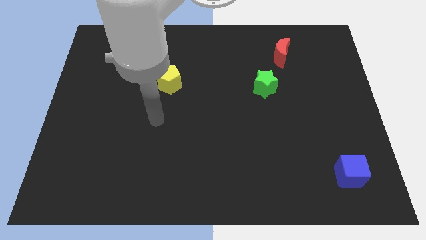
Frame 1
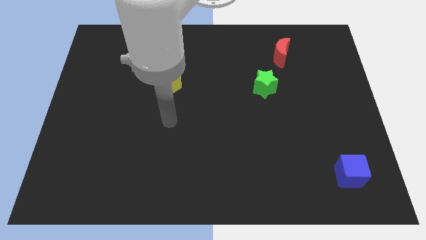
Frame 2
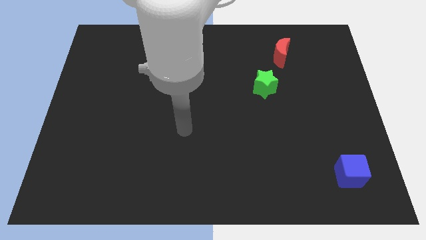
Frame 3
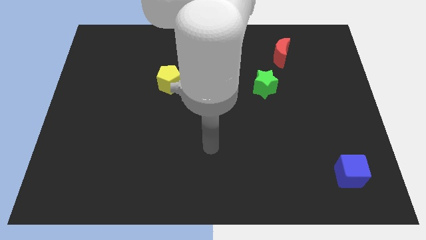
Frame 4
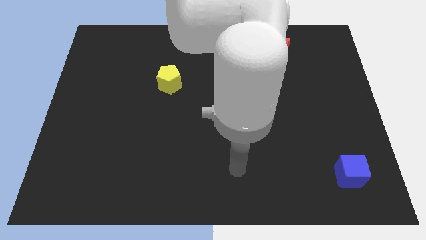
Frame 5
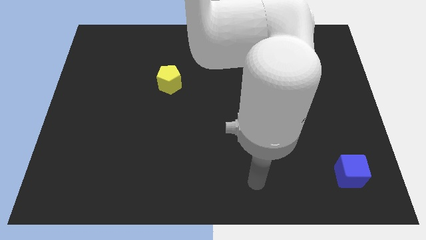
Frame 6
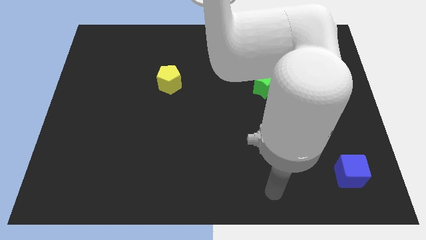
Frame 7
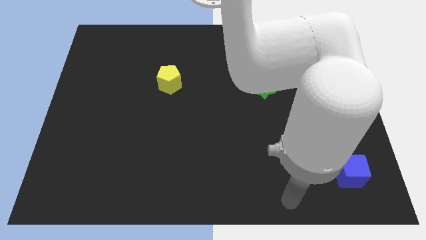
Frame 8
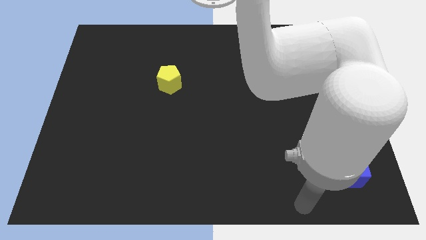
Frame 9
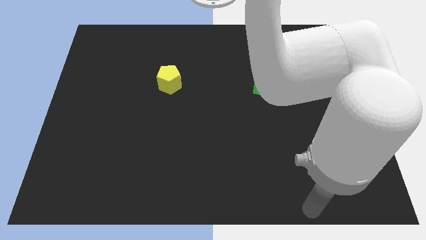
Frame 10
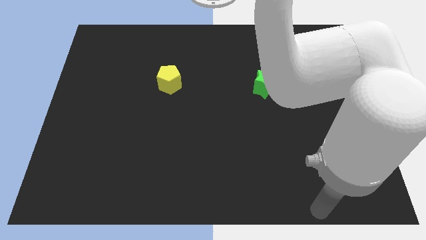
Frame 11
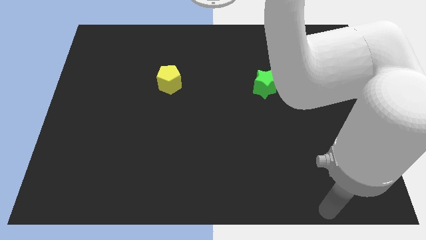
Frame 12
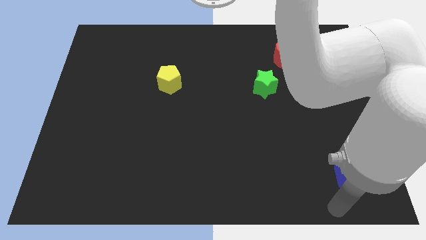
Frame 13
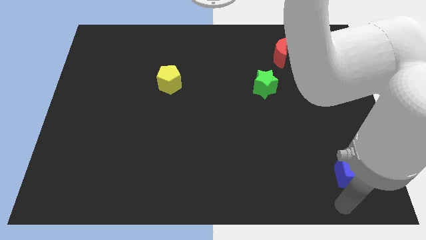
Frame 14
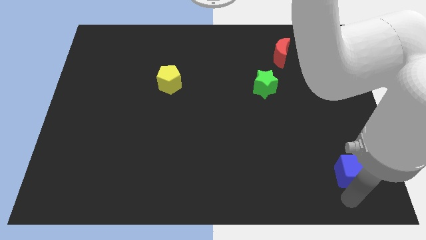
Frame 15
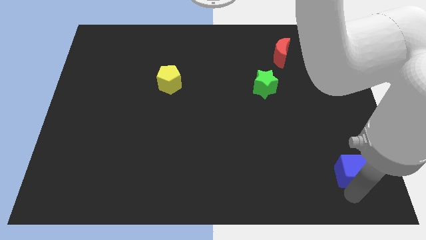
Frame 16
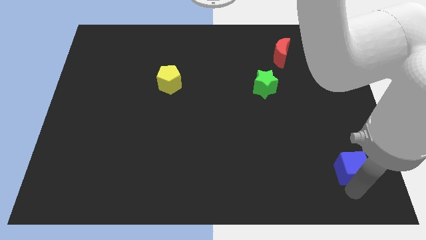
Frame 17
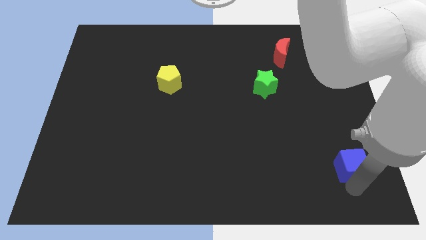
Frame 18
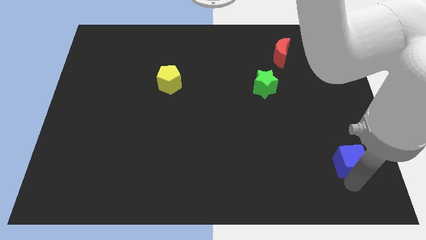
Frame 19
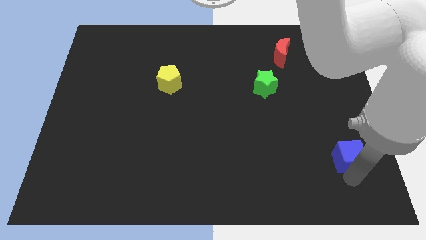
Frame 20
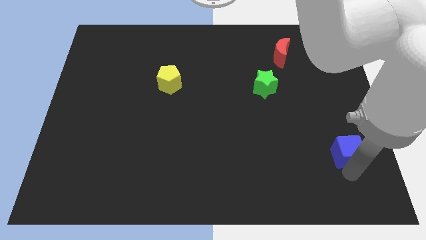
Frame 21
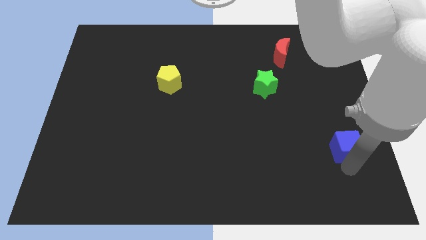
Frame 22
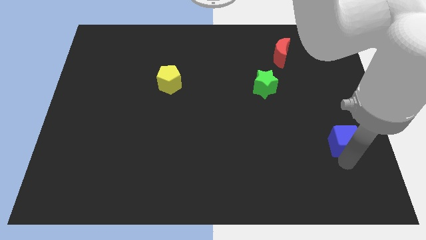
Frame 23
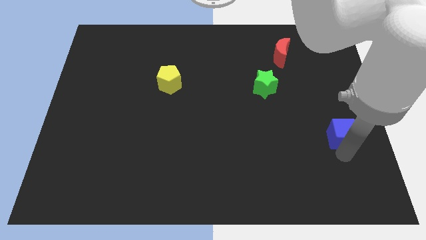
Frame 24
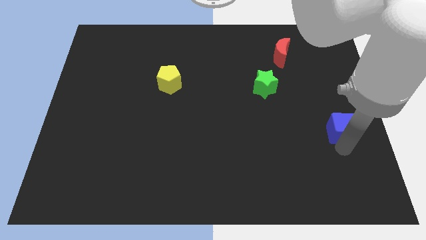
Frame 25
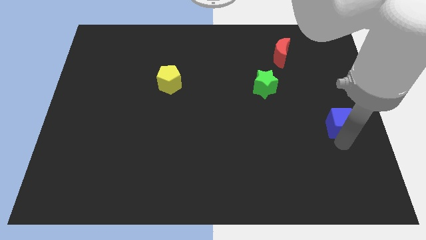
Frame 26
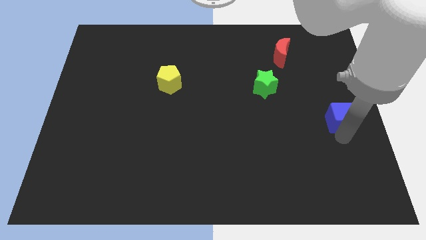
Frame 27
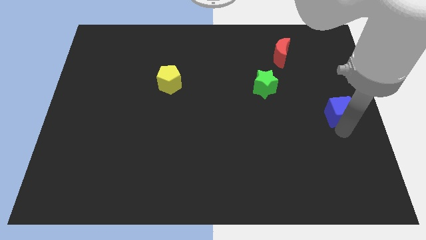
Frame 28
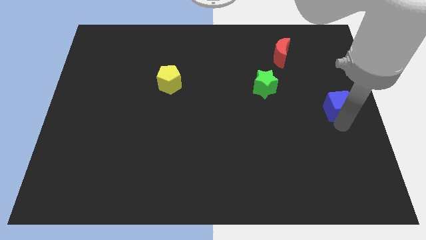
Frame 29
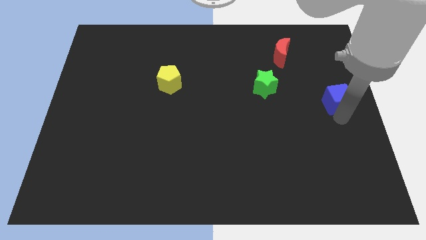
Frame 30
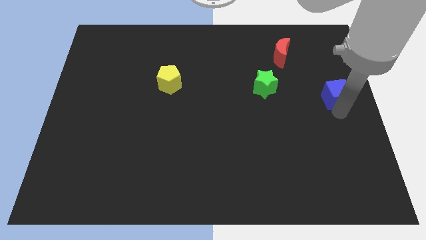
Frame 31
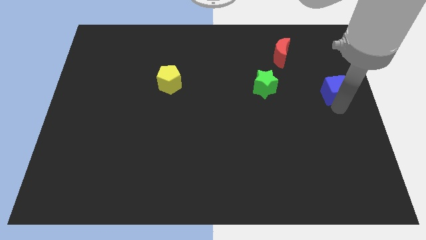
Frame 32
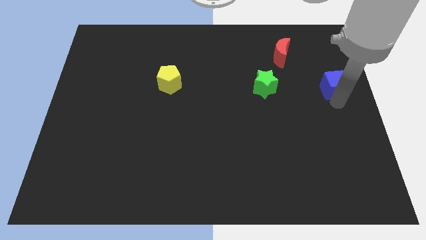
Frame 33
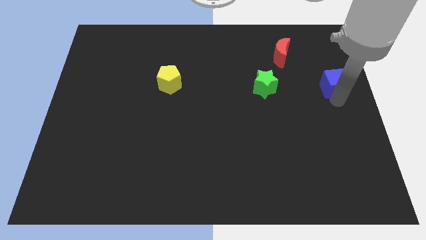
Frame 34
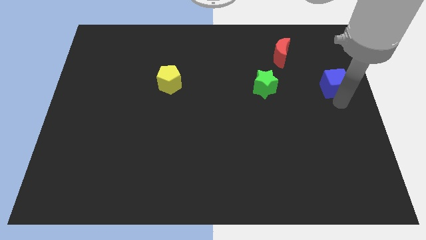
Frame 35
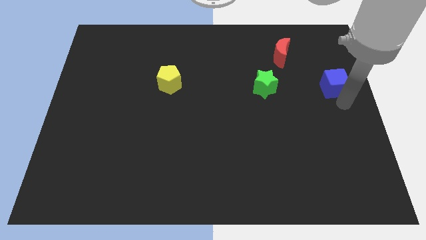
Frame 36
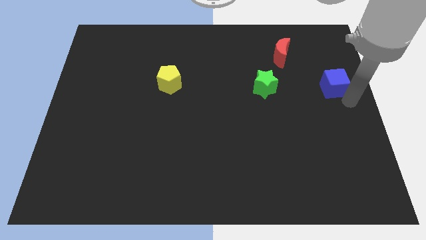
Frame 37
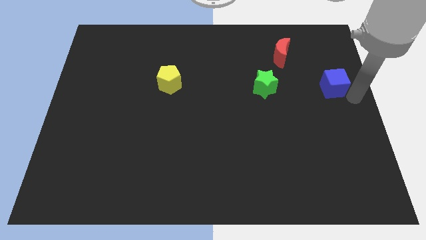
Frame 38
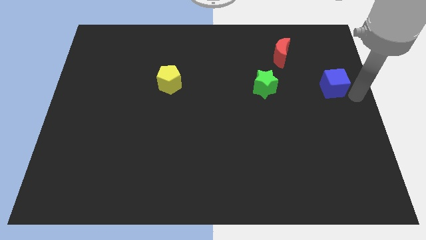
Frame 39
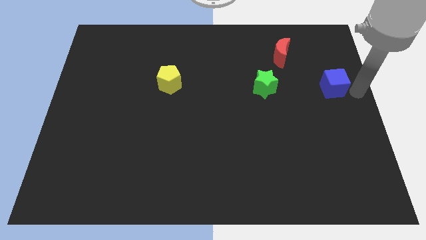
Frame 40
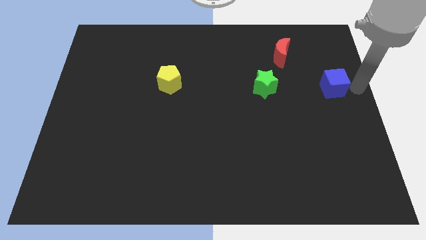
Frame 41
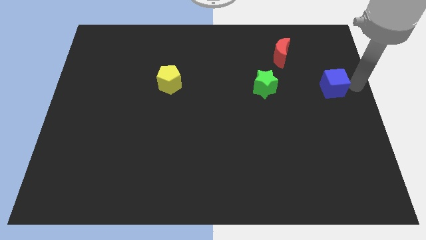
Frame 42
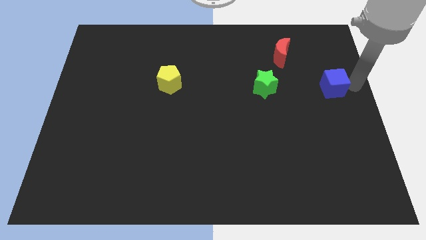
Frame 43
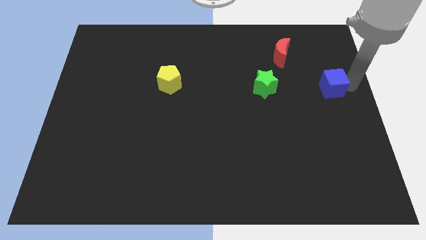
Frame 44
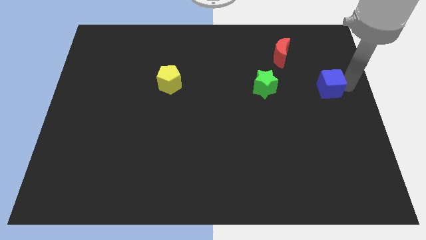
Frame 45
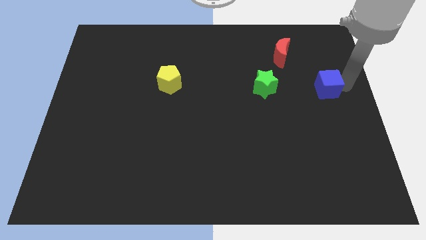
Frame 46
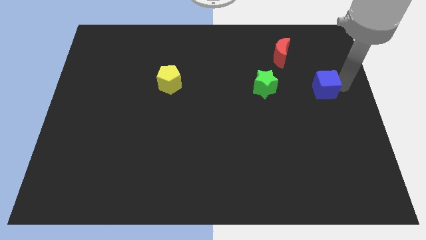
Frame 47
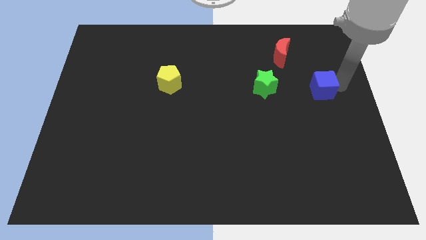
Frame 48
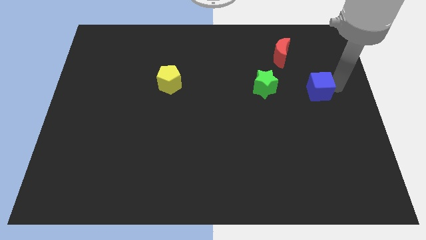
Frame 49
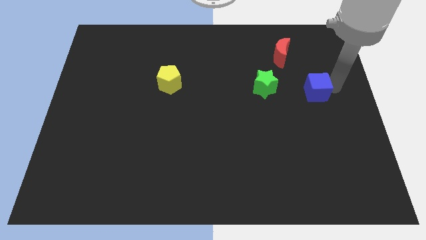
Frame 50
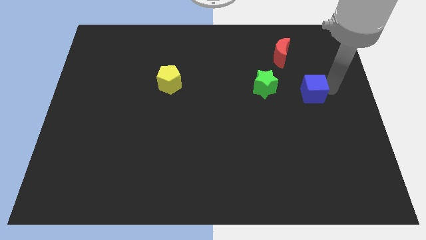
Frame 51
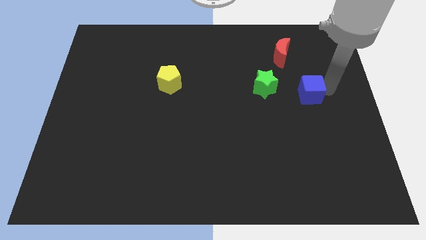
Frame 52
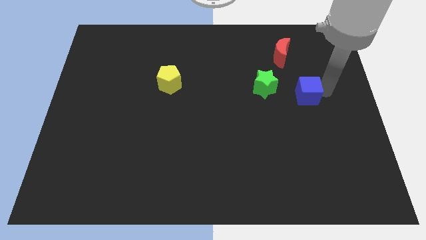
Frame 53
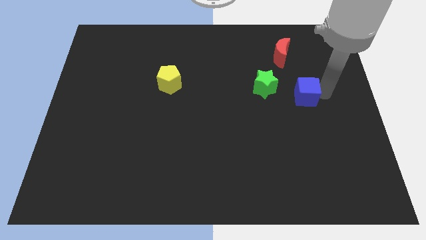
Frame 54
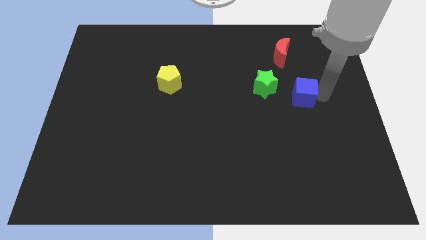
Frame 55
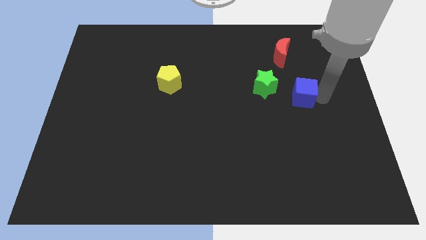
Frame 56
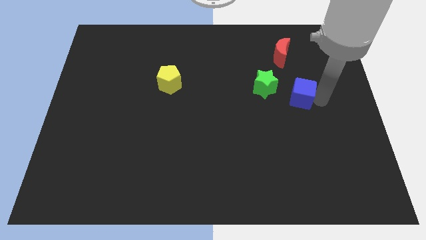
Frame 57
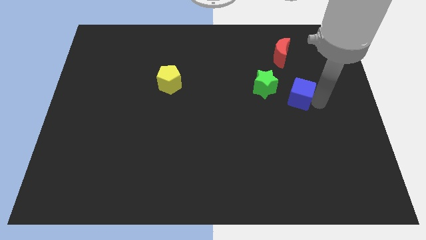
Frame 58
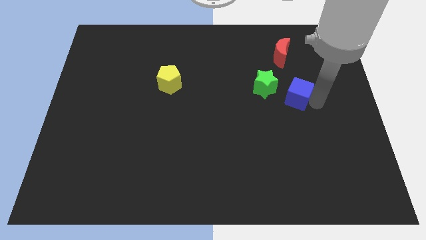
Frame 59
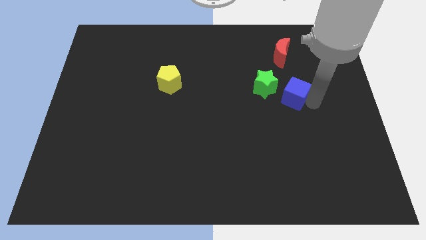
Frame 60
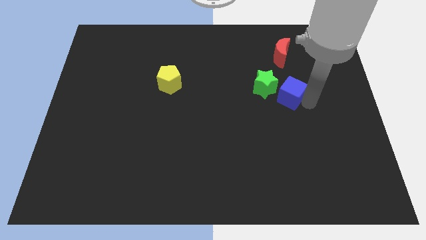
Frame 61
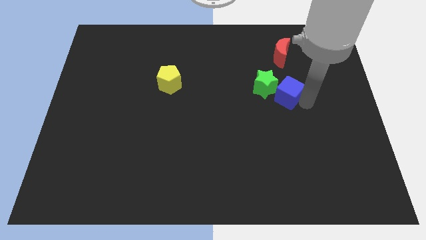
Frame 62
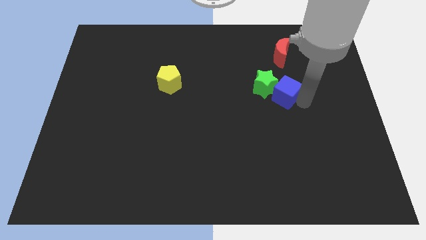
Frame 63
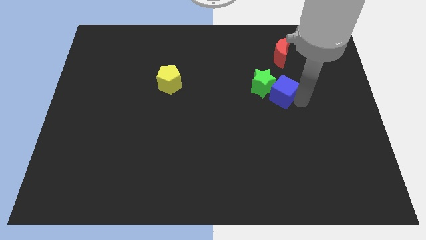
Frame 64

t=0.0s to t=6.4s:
push the blue cube to the green block

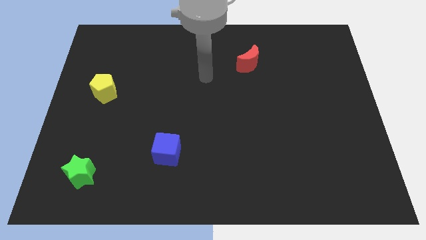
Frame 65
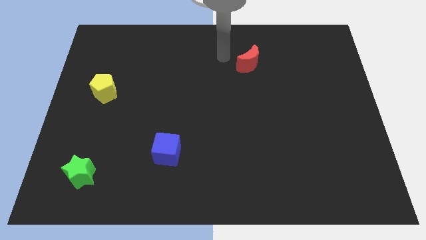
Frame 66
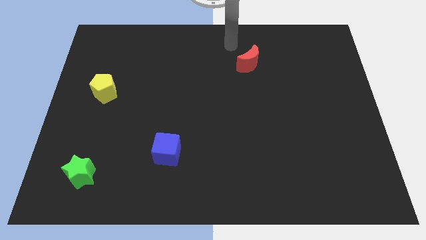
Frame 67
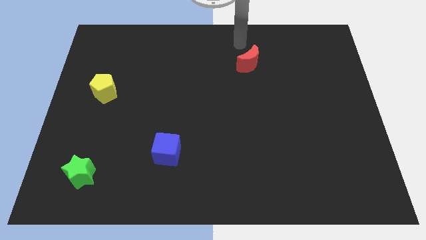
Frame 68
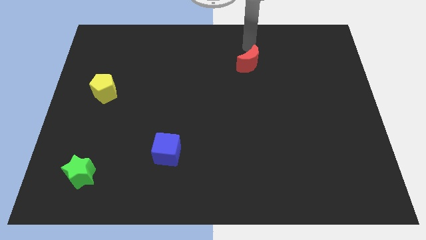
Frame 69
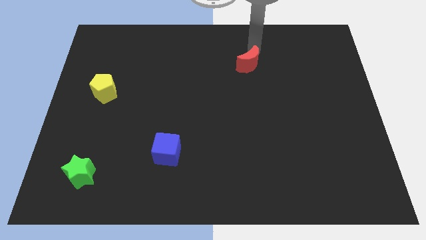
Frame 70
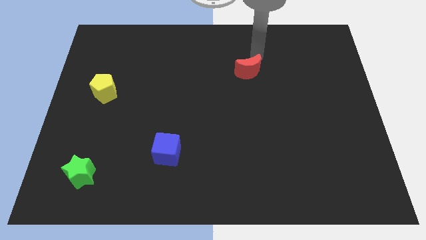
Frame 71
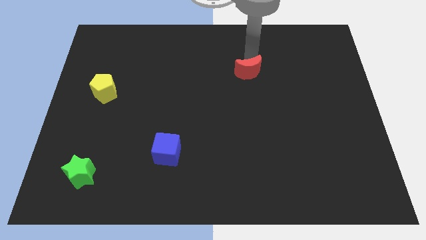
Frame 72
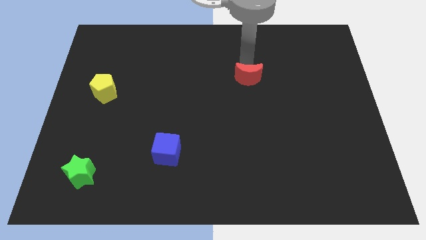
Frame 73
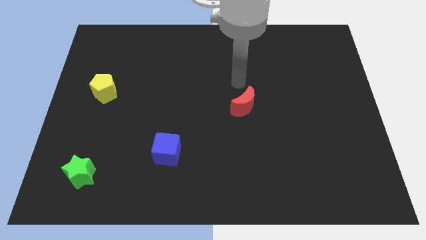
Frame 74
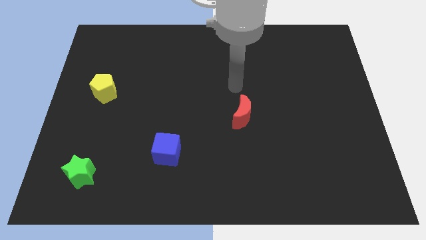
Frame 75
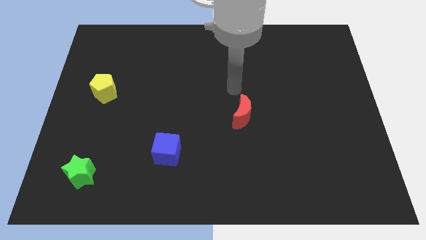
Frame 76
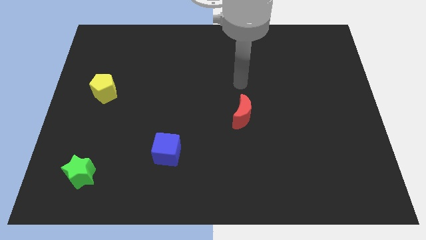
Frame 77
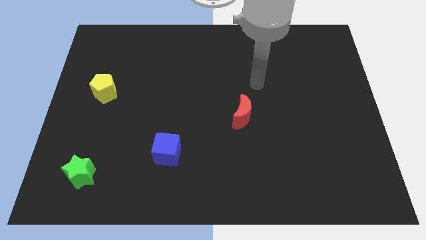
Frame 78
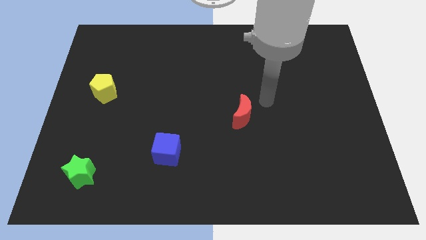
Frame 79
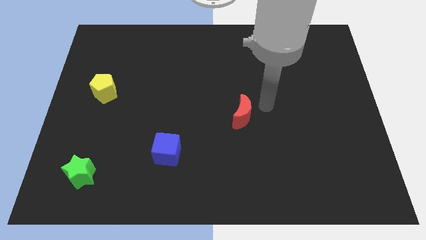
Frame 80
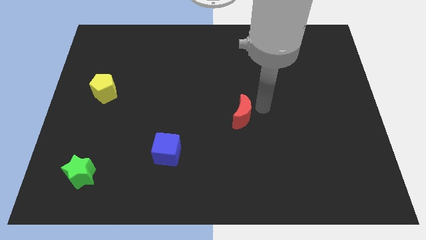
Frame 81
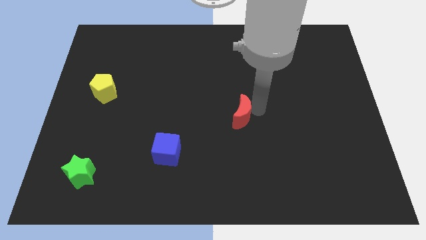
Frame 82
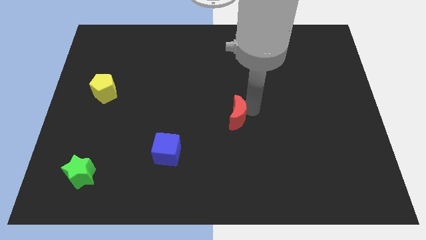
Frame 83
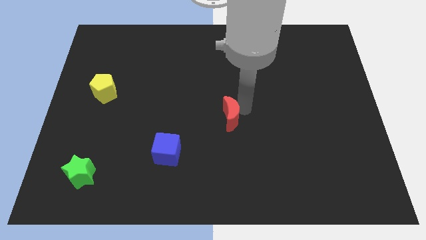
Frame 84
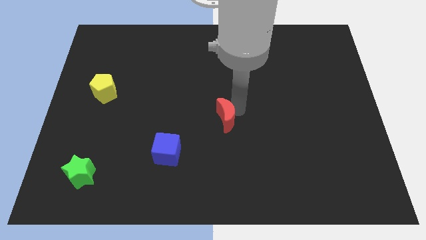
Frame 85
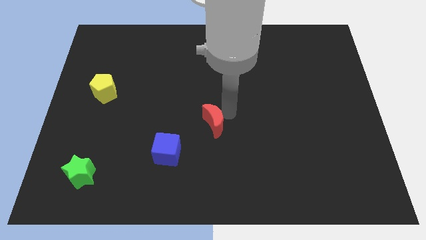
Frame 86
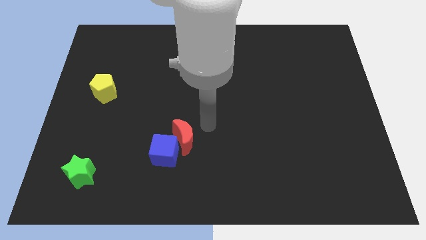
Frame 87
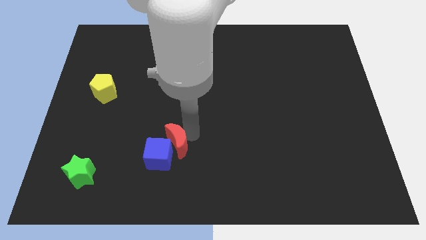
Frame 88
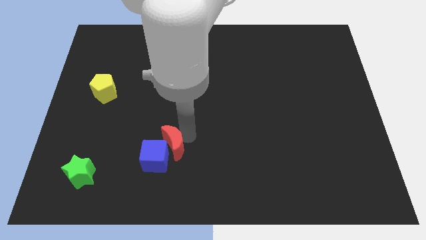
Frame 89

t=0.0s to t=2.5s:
put the moon close to the cube
